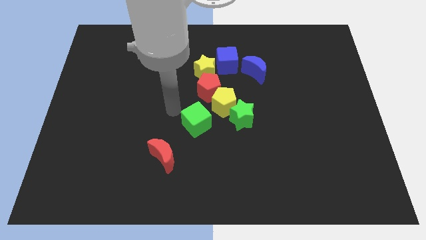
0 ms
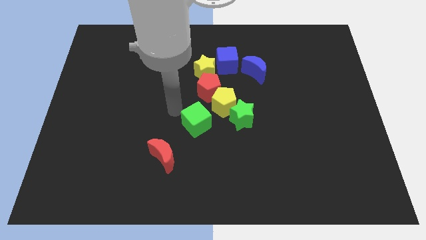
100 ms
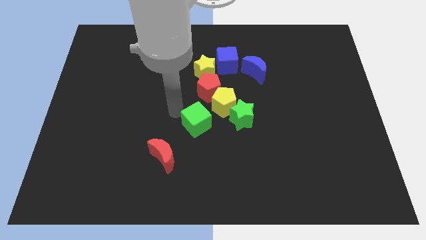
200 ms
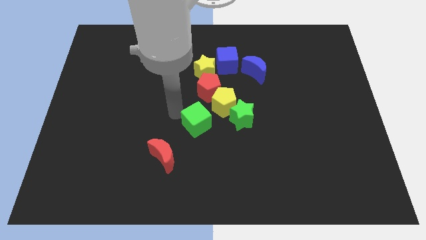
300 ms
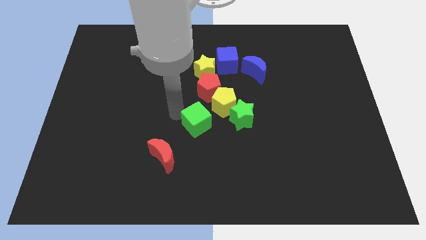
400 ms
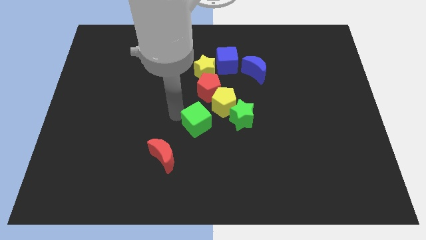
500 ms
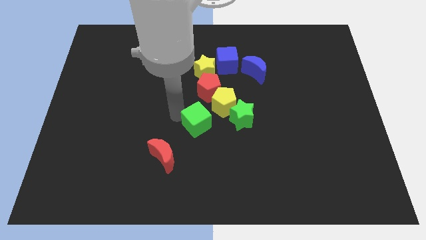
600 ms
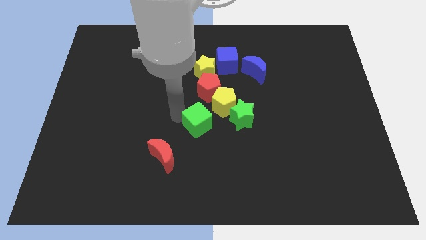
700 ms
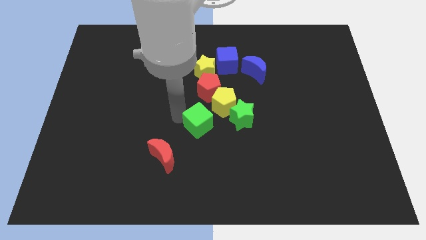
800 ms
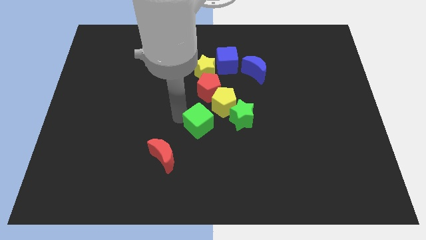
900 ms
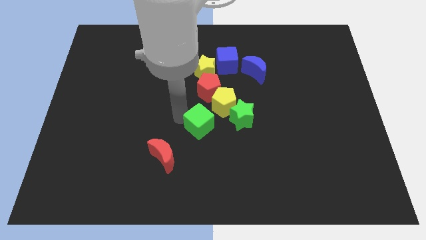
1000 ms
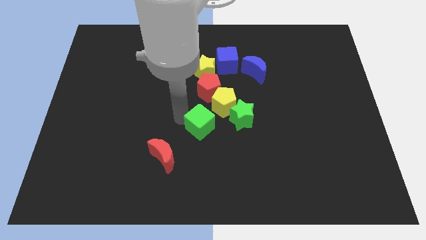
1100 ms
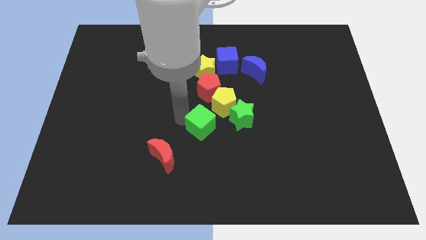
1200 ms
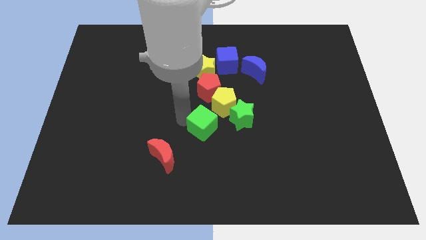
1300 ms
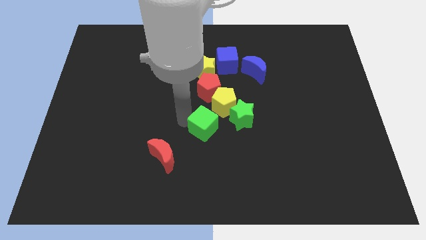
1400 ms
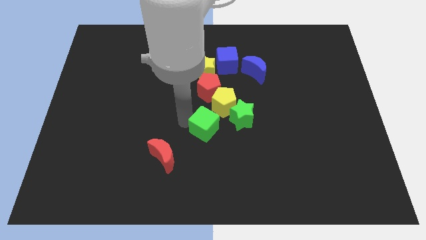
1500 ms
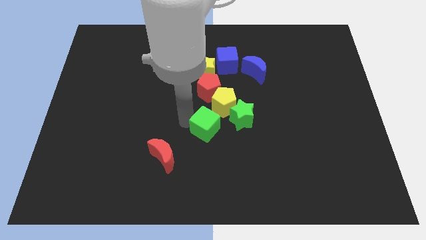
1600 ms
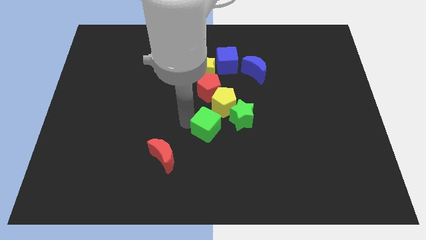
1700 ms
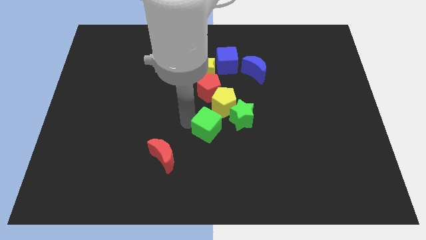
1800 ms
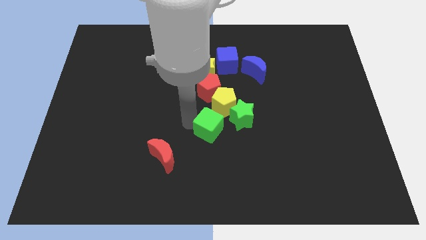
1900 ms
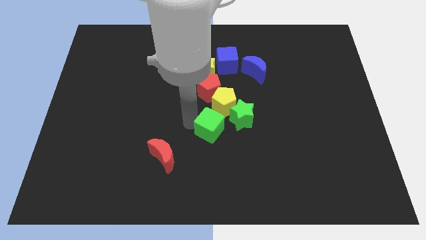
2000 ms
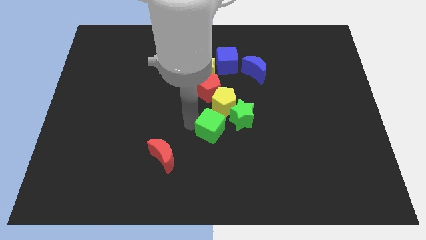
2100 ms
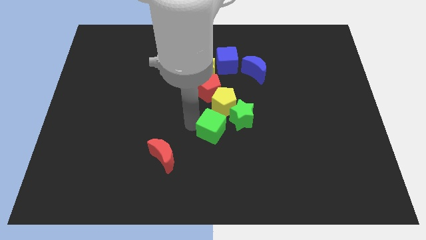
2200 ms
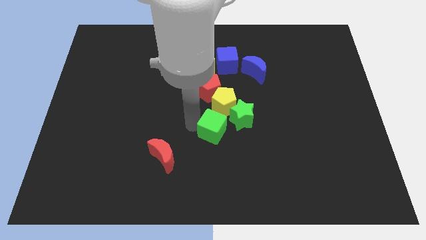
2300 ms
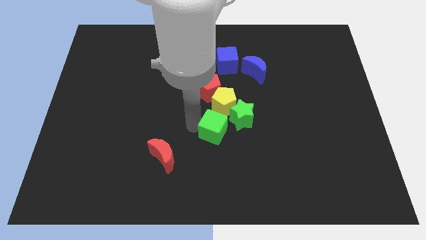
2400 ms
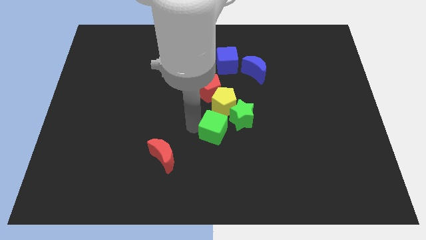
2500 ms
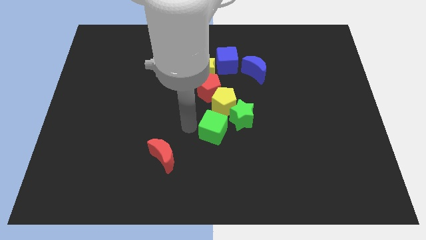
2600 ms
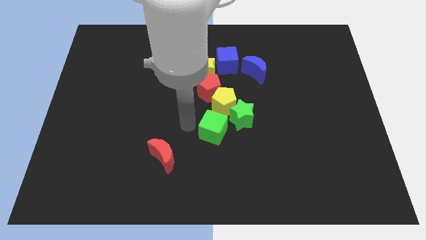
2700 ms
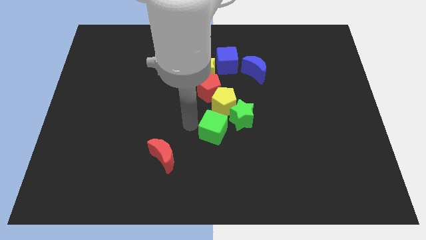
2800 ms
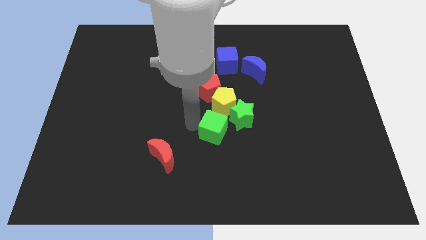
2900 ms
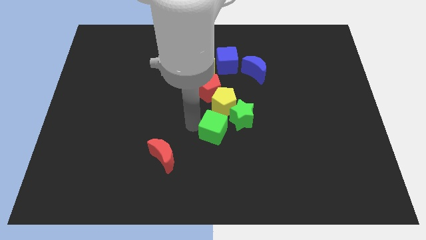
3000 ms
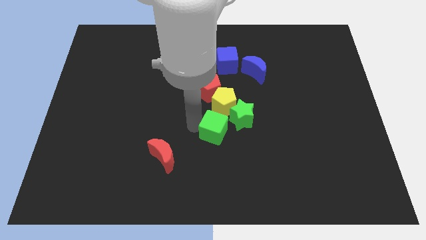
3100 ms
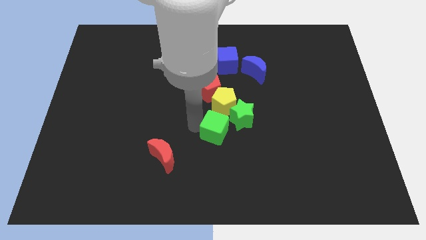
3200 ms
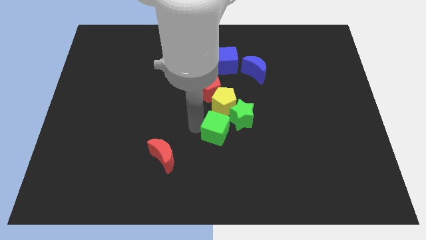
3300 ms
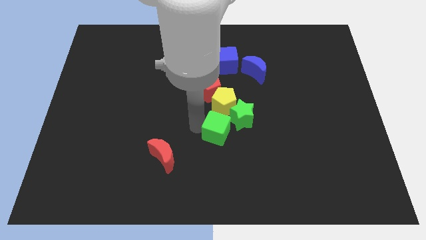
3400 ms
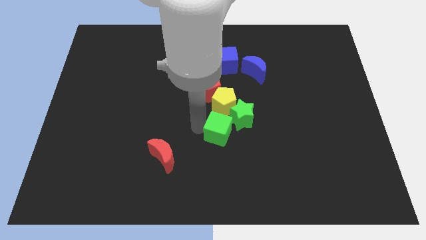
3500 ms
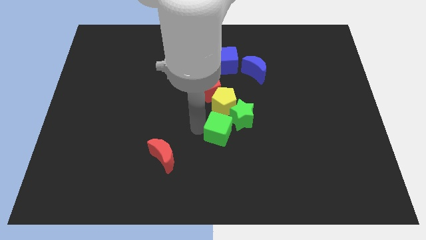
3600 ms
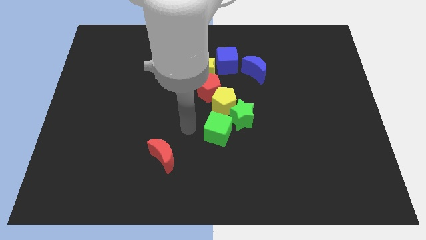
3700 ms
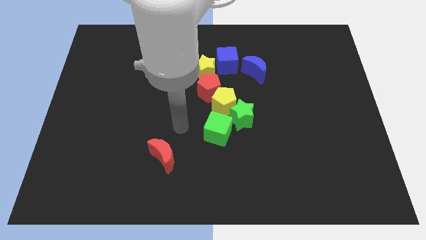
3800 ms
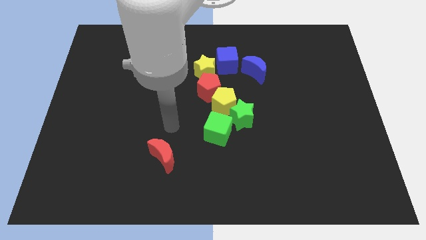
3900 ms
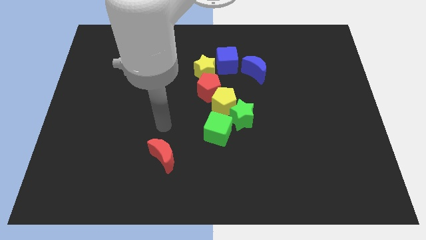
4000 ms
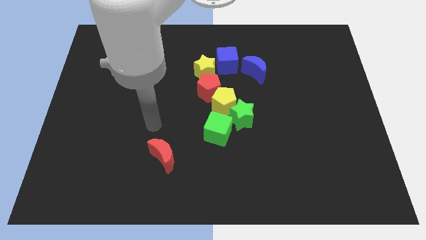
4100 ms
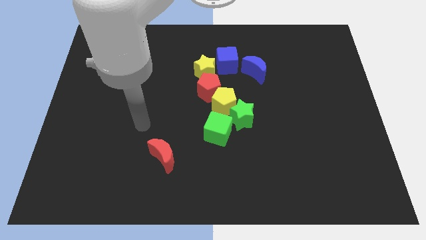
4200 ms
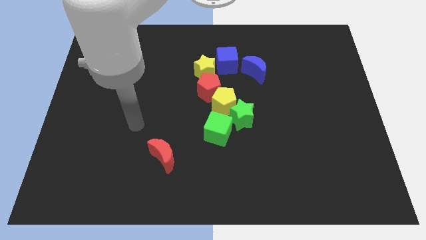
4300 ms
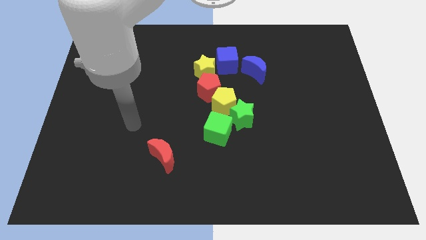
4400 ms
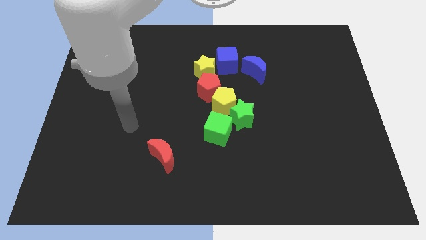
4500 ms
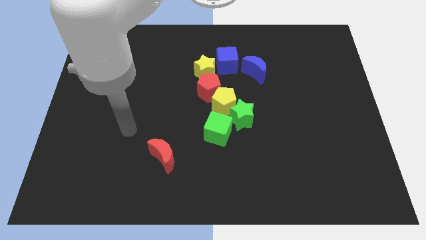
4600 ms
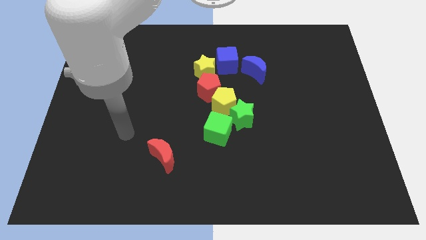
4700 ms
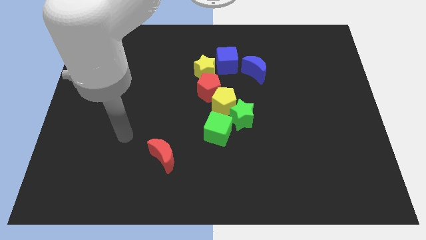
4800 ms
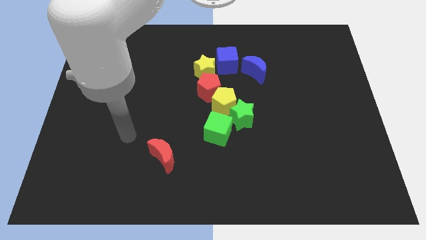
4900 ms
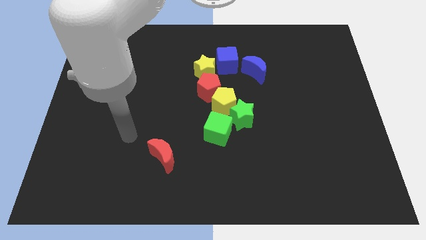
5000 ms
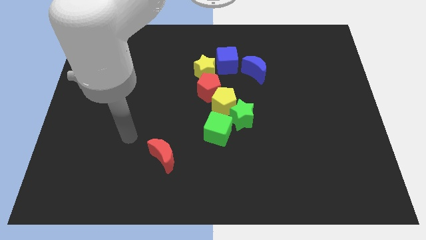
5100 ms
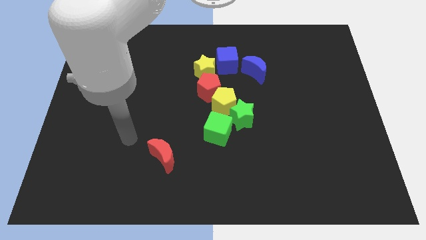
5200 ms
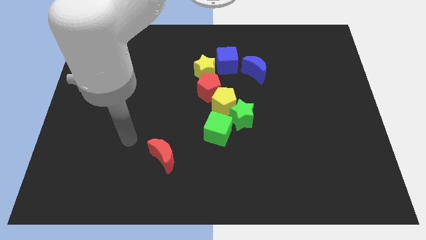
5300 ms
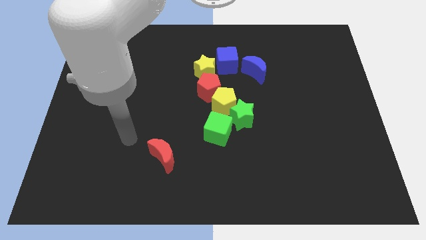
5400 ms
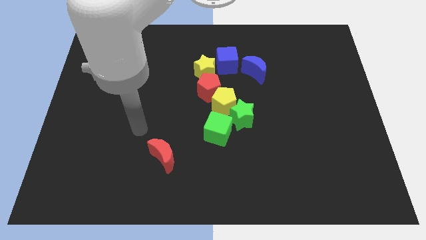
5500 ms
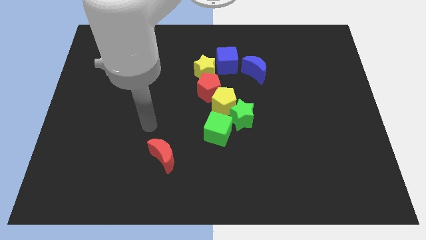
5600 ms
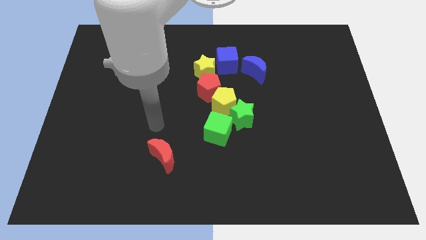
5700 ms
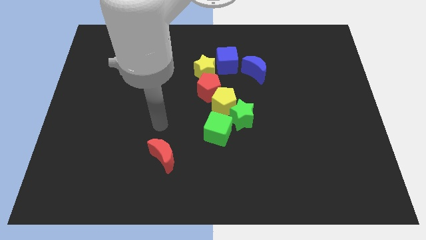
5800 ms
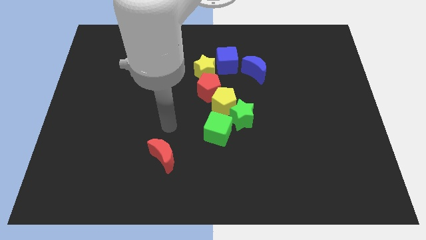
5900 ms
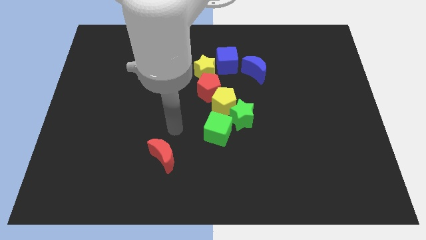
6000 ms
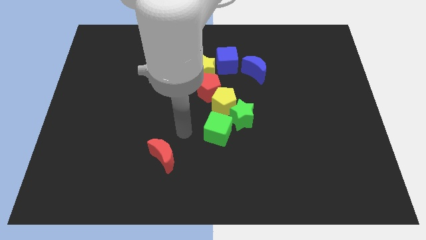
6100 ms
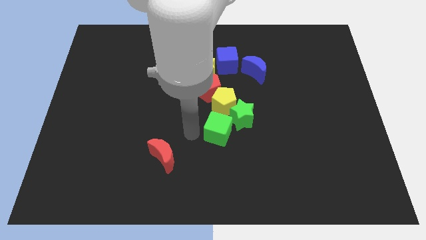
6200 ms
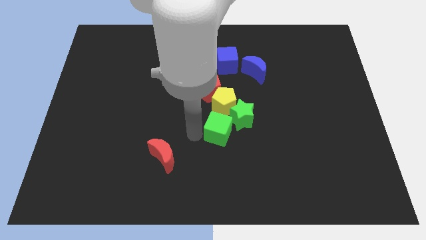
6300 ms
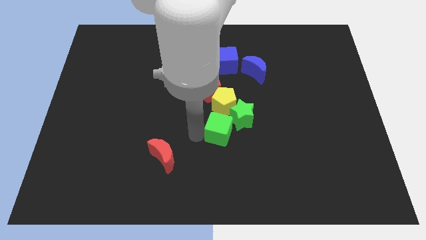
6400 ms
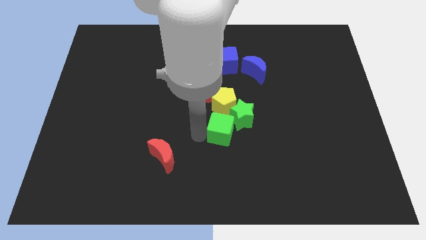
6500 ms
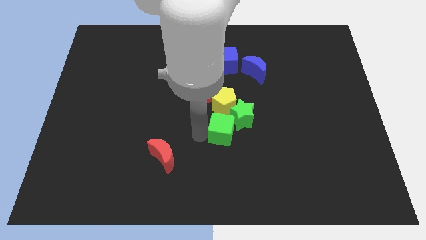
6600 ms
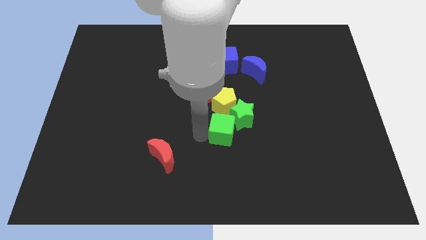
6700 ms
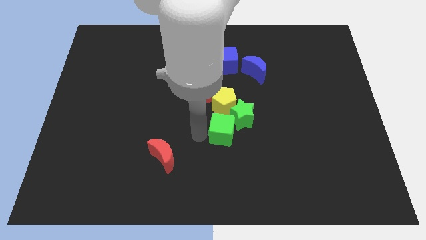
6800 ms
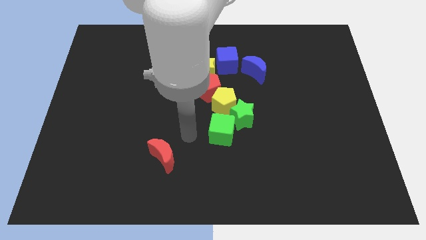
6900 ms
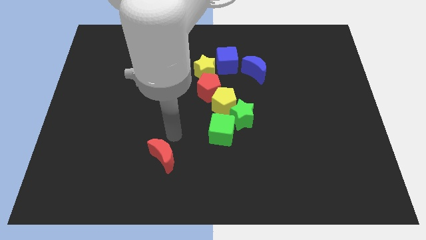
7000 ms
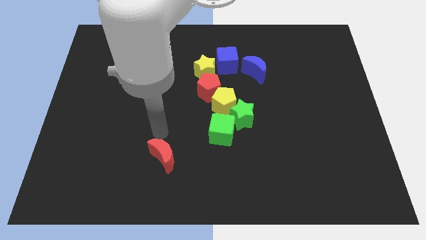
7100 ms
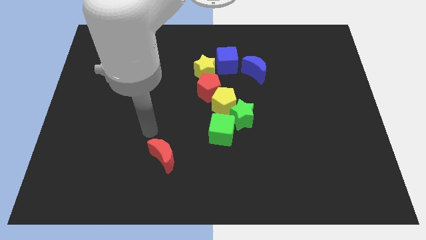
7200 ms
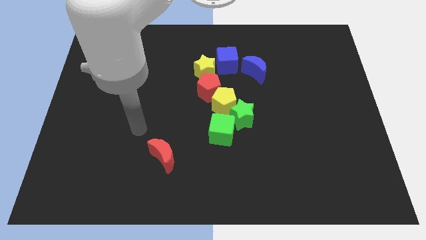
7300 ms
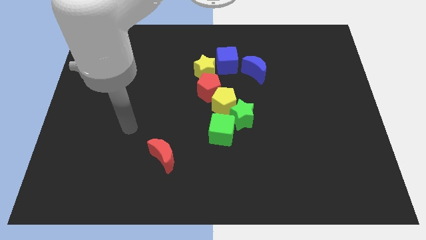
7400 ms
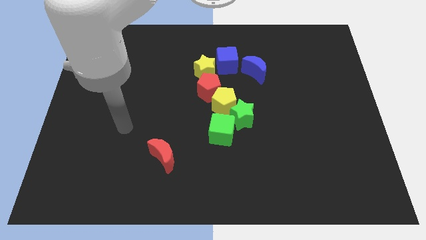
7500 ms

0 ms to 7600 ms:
move the green cube to the left of the green star

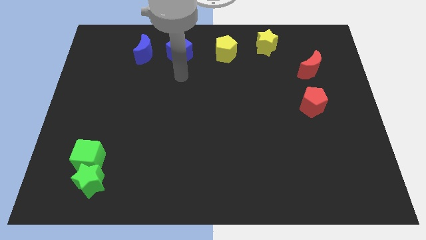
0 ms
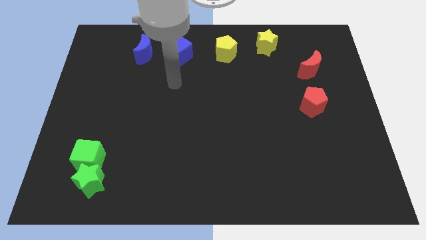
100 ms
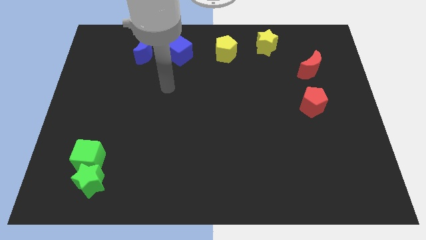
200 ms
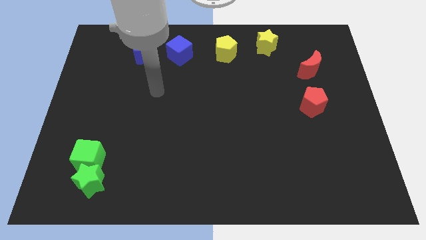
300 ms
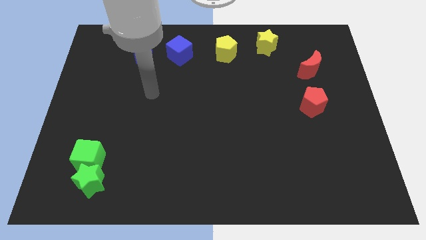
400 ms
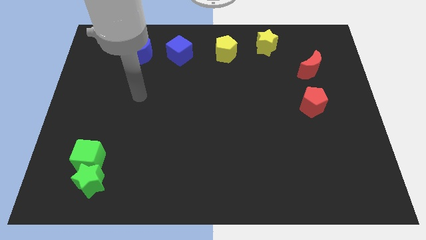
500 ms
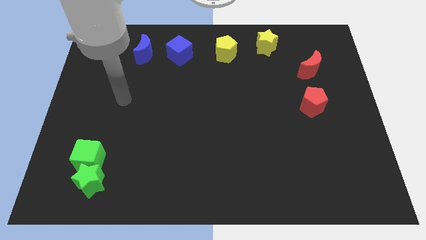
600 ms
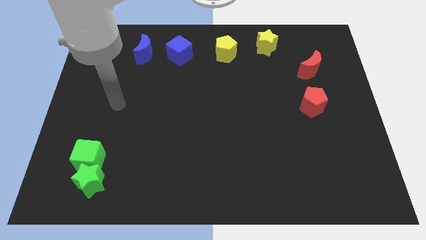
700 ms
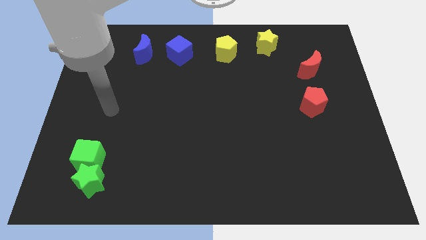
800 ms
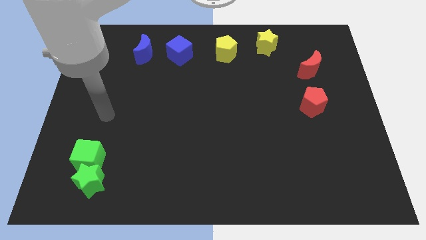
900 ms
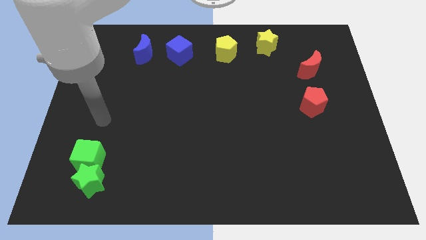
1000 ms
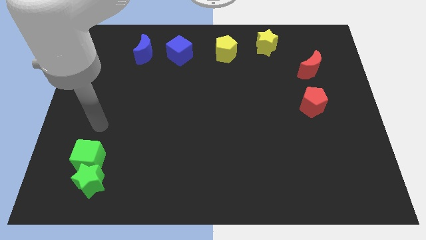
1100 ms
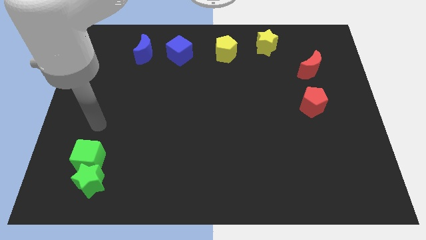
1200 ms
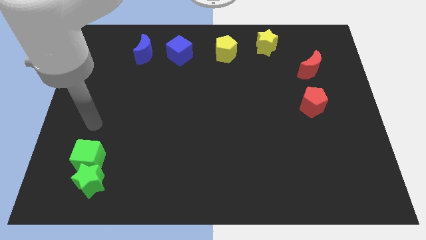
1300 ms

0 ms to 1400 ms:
place your arm at the top of green cube

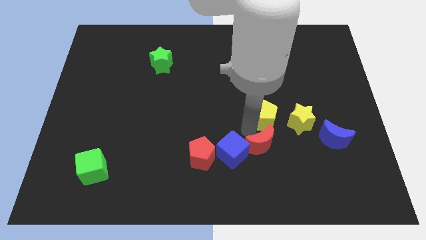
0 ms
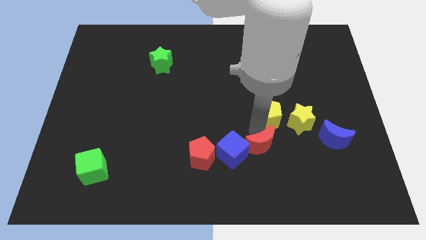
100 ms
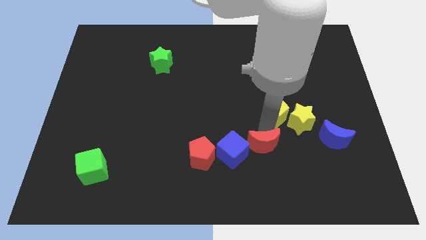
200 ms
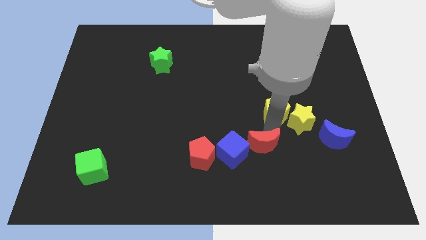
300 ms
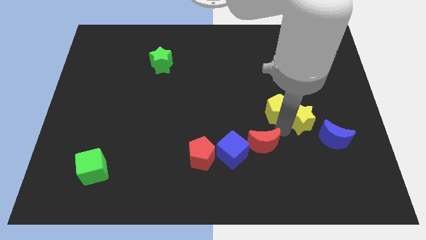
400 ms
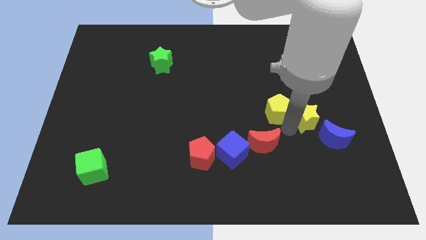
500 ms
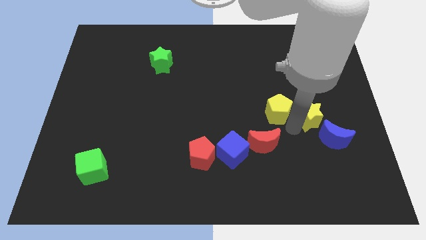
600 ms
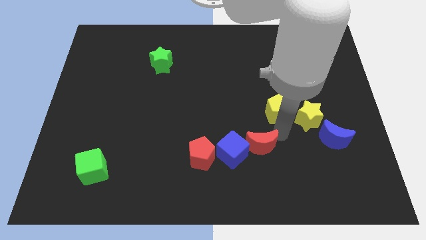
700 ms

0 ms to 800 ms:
point your arm between red moon and yellow pentagon
